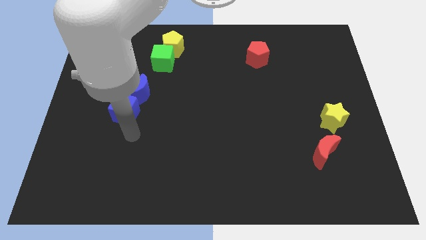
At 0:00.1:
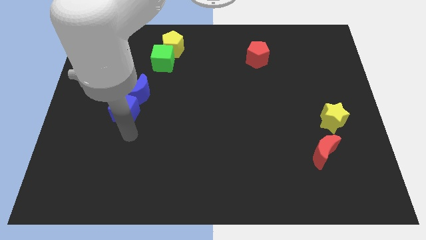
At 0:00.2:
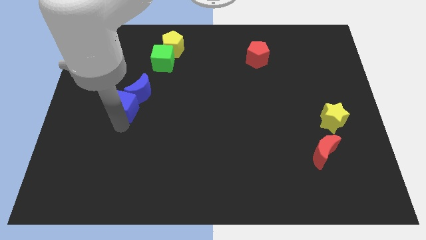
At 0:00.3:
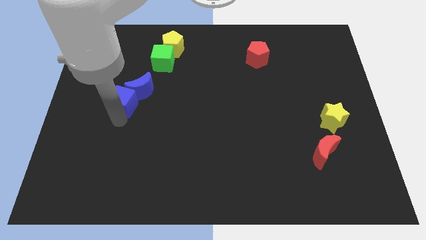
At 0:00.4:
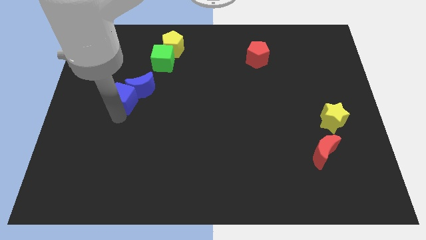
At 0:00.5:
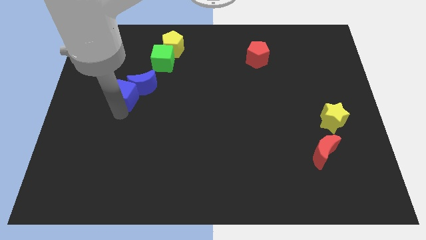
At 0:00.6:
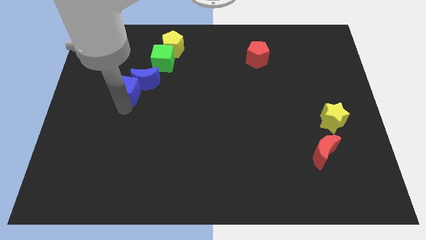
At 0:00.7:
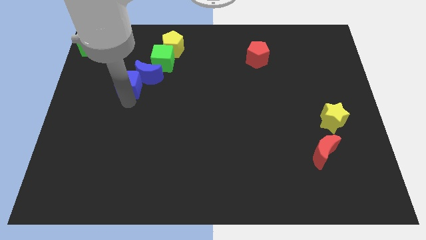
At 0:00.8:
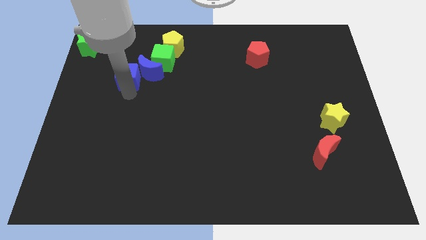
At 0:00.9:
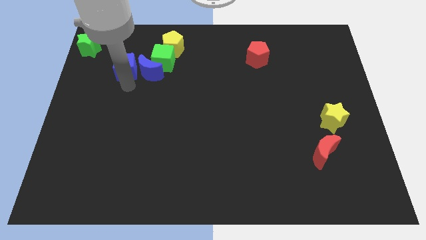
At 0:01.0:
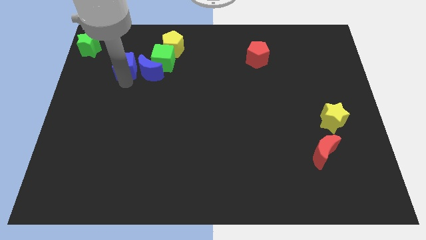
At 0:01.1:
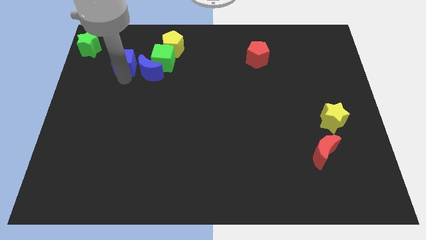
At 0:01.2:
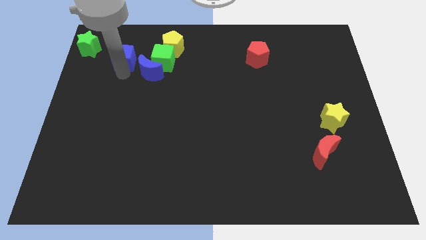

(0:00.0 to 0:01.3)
place blue cube to the left of blue moon

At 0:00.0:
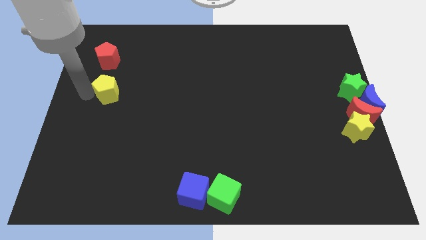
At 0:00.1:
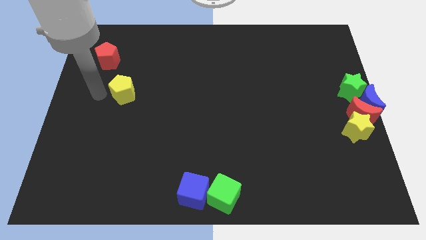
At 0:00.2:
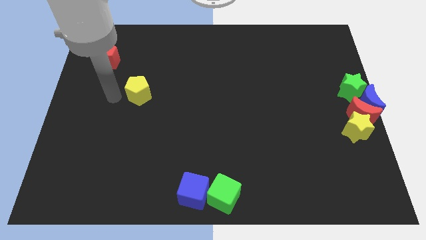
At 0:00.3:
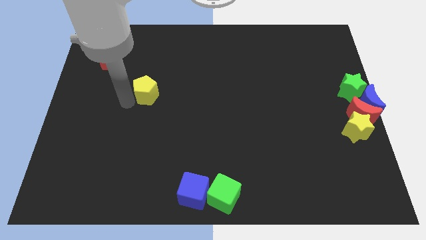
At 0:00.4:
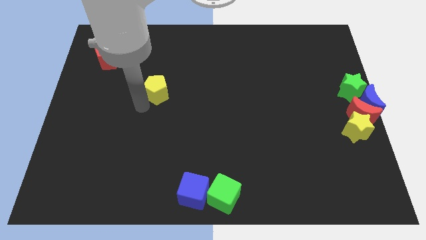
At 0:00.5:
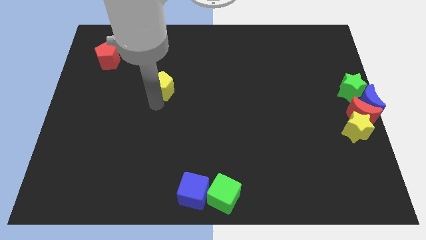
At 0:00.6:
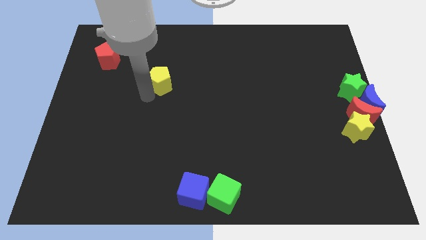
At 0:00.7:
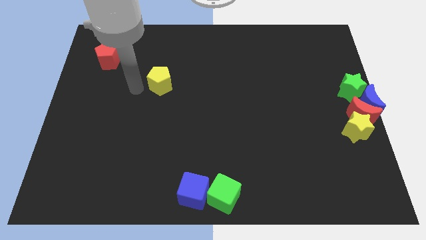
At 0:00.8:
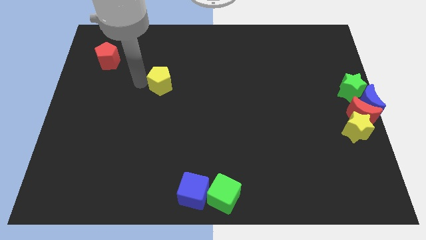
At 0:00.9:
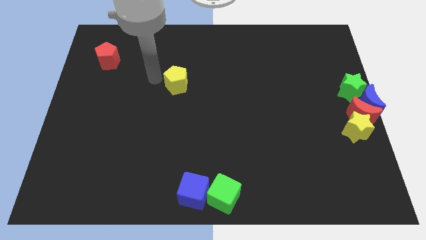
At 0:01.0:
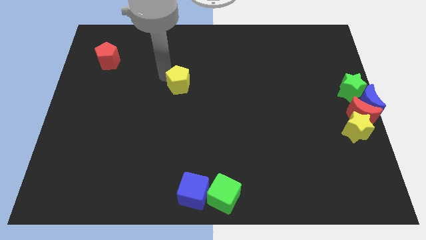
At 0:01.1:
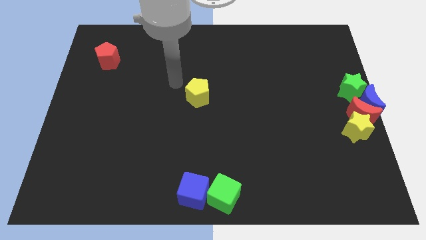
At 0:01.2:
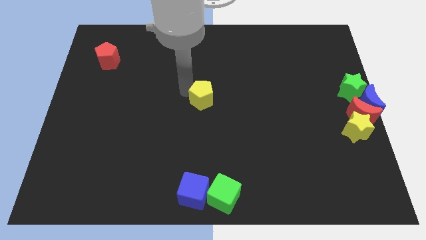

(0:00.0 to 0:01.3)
slide the yellow pentagon above the blue cube

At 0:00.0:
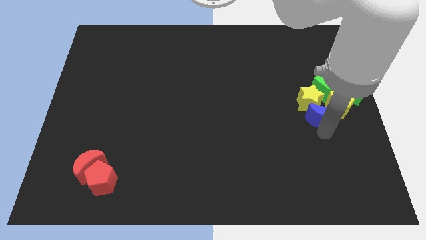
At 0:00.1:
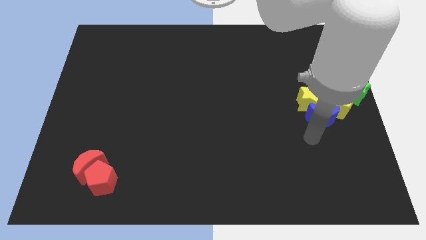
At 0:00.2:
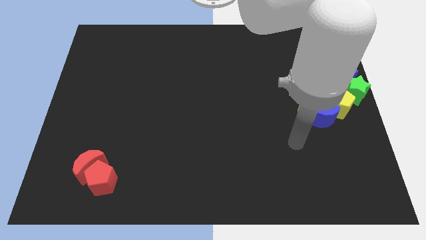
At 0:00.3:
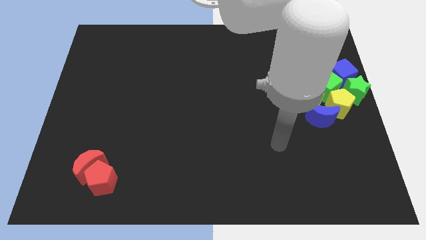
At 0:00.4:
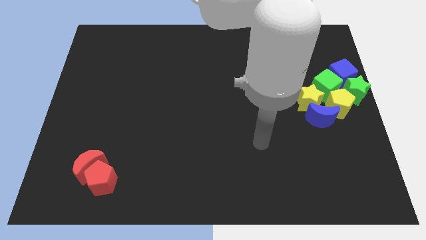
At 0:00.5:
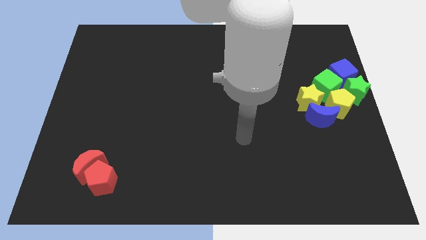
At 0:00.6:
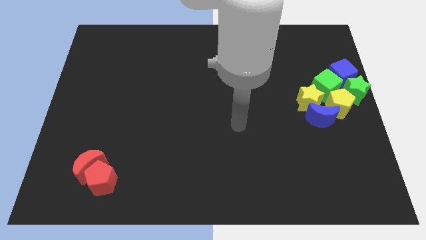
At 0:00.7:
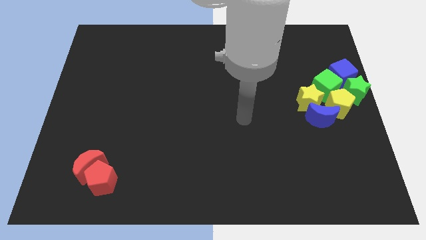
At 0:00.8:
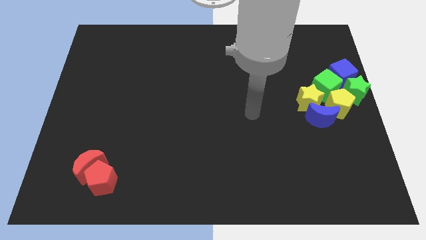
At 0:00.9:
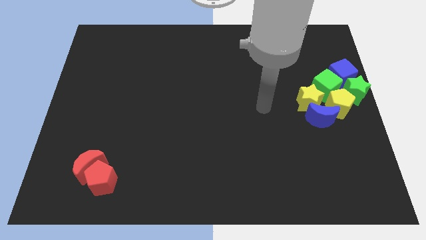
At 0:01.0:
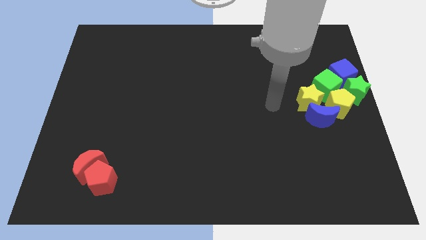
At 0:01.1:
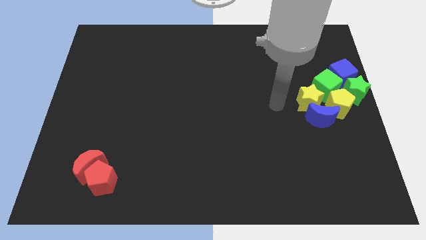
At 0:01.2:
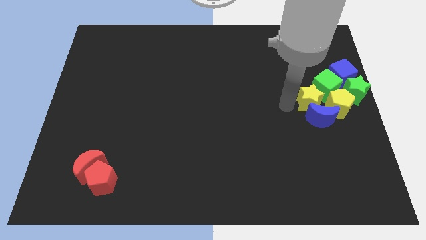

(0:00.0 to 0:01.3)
point your arm towards the left side of yellow star

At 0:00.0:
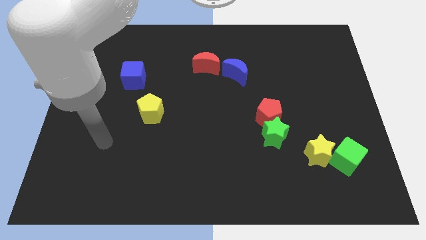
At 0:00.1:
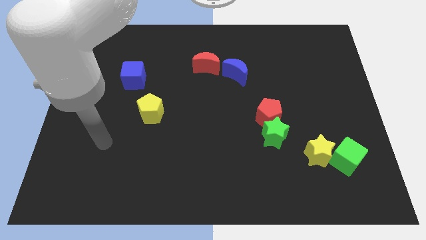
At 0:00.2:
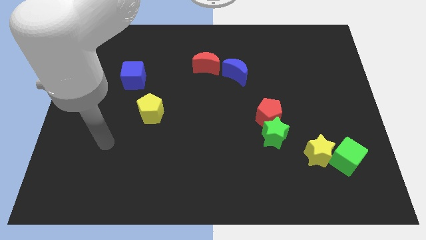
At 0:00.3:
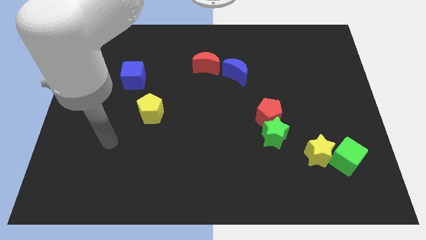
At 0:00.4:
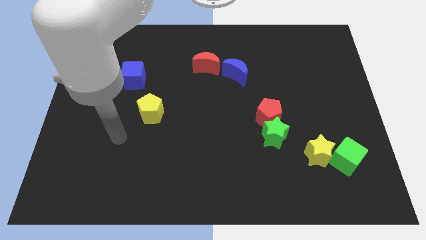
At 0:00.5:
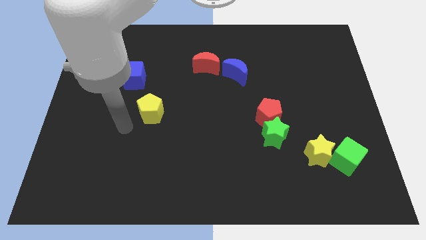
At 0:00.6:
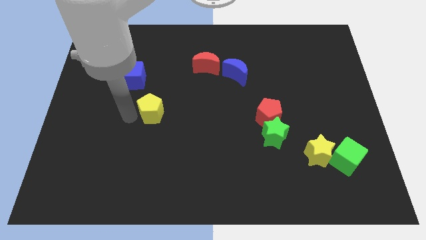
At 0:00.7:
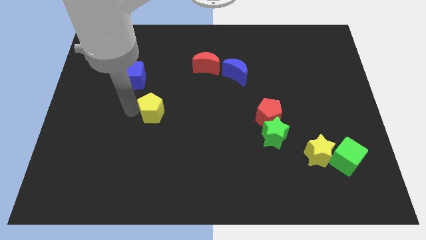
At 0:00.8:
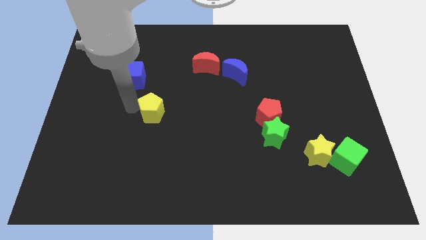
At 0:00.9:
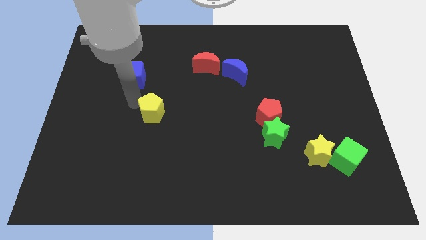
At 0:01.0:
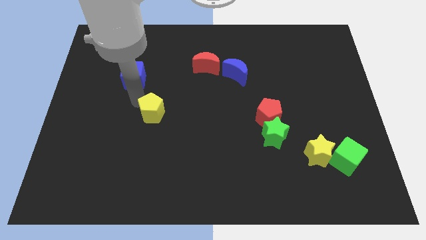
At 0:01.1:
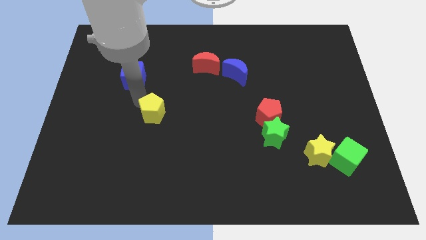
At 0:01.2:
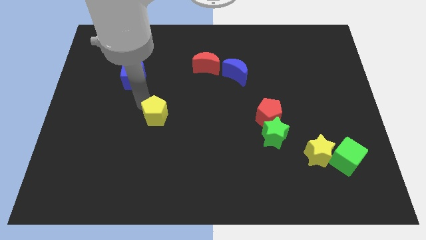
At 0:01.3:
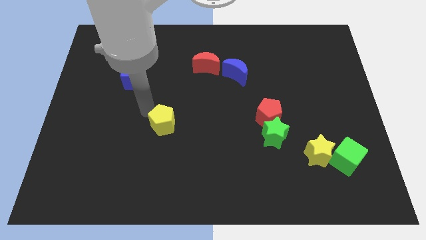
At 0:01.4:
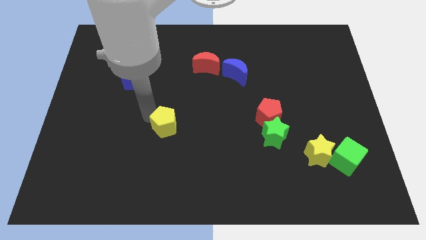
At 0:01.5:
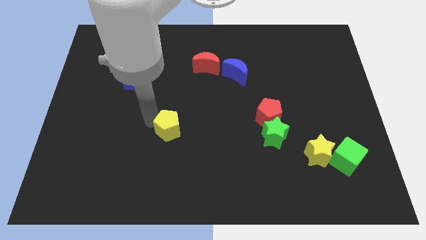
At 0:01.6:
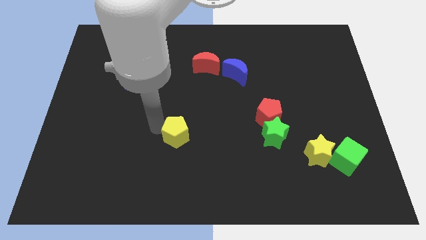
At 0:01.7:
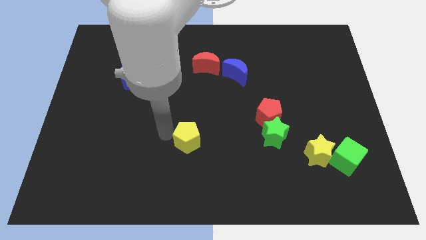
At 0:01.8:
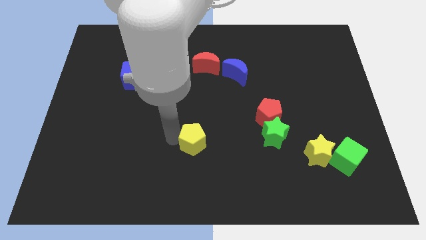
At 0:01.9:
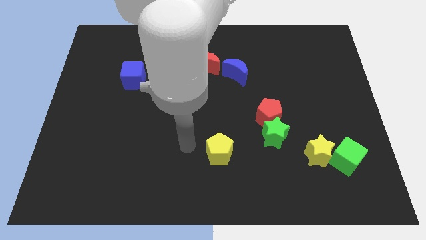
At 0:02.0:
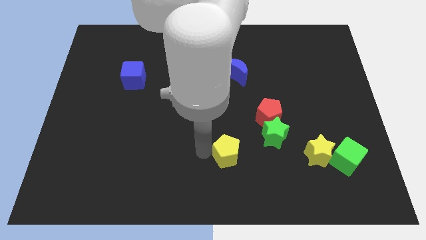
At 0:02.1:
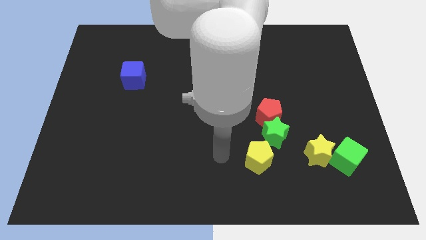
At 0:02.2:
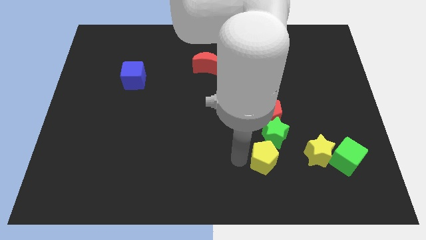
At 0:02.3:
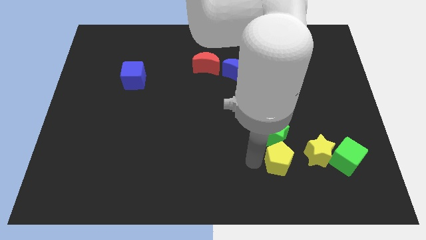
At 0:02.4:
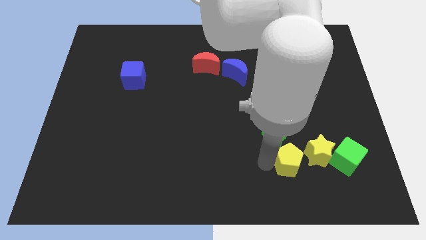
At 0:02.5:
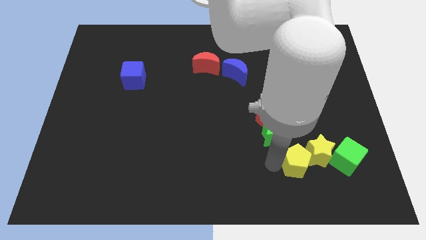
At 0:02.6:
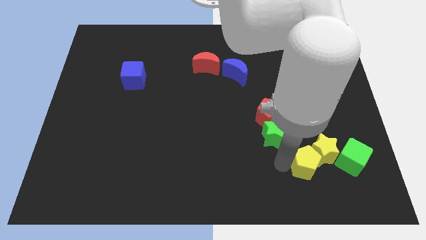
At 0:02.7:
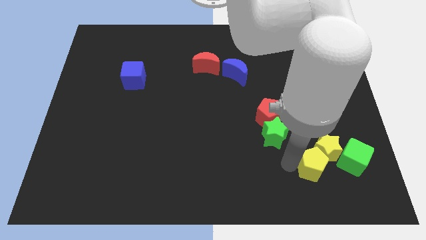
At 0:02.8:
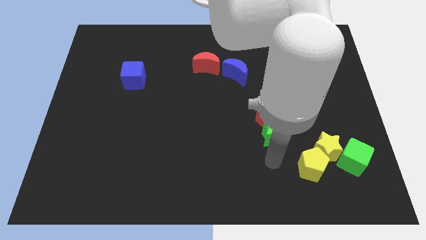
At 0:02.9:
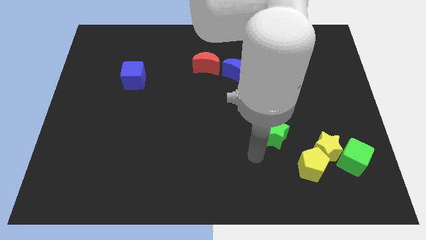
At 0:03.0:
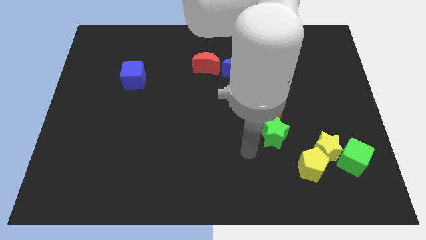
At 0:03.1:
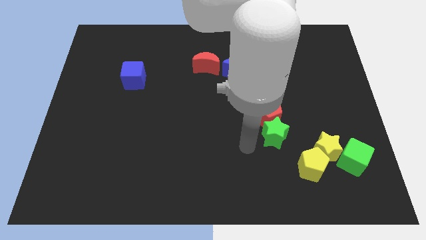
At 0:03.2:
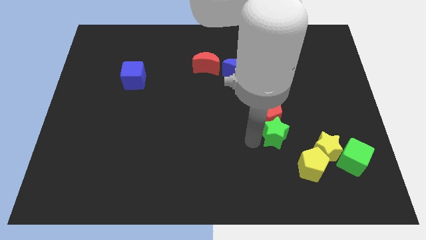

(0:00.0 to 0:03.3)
push the yellow pentagon into the yellow star

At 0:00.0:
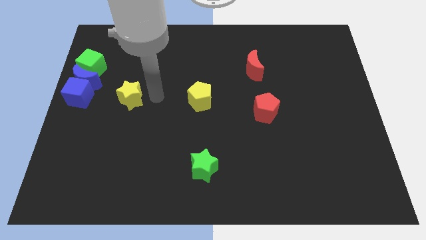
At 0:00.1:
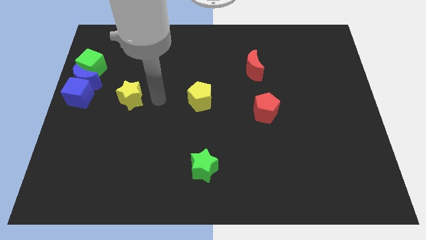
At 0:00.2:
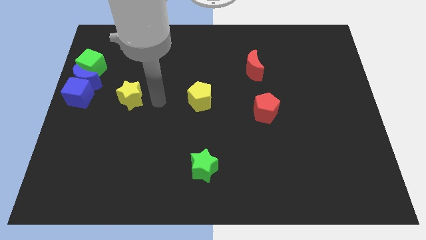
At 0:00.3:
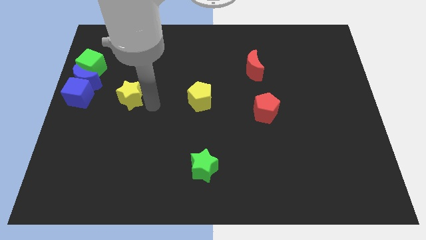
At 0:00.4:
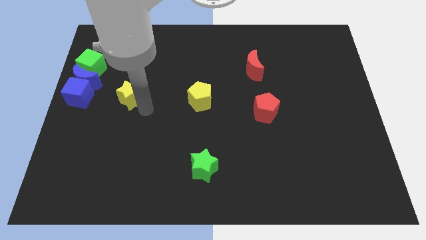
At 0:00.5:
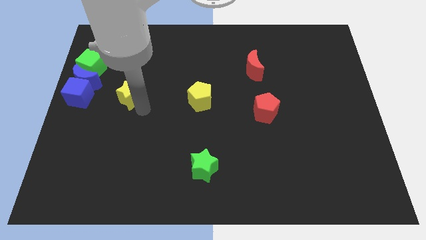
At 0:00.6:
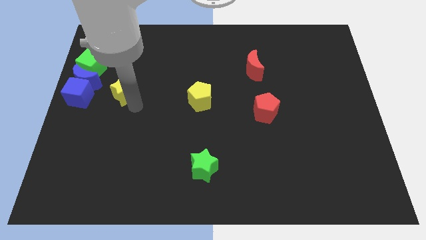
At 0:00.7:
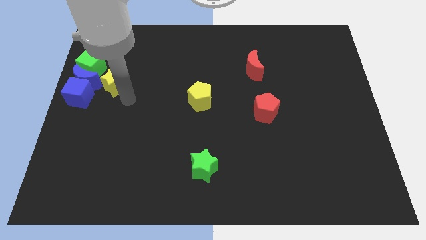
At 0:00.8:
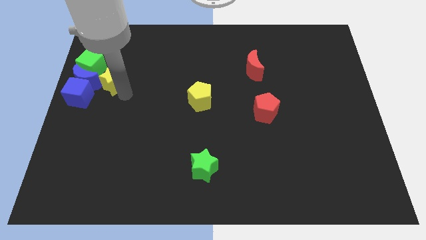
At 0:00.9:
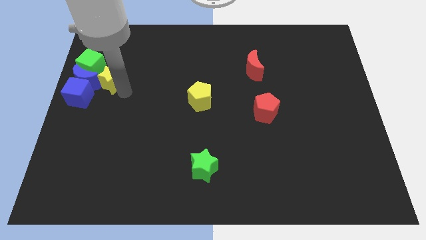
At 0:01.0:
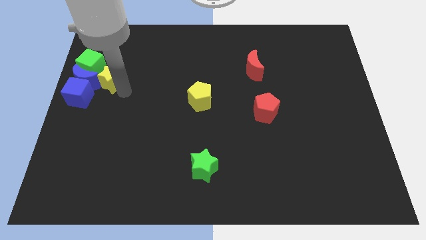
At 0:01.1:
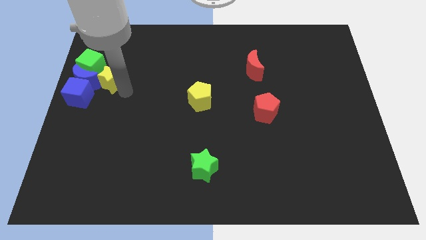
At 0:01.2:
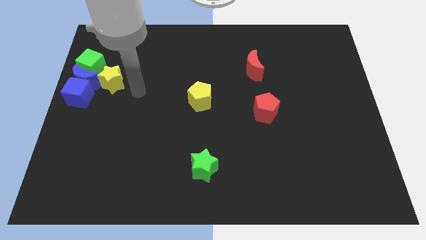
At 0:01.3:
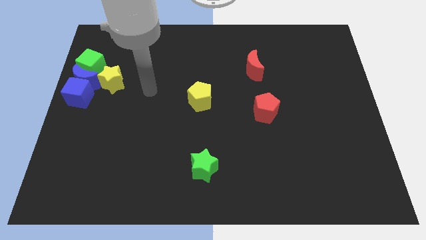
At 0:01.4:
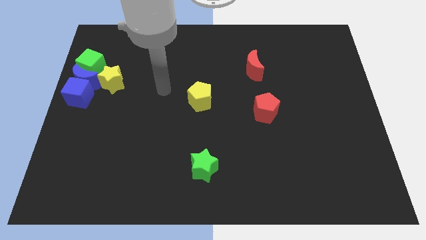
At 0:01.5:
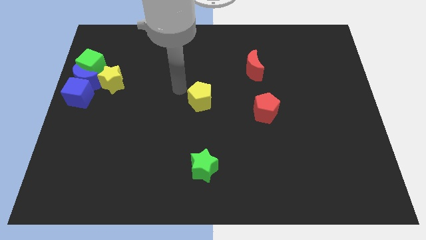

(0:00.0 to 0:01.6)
push the yellow star into the blue moon
